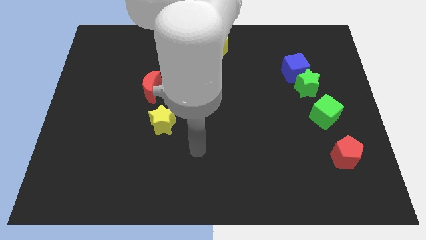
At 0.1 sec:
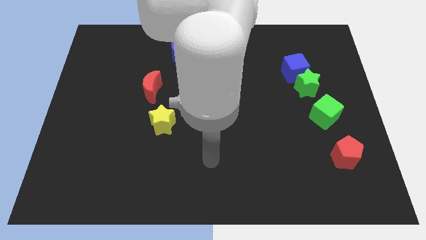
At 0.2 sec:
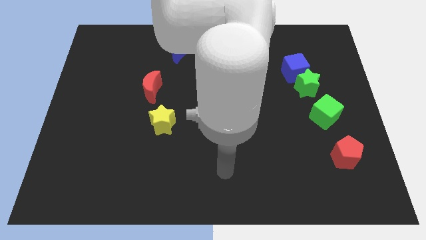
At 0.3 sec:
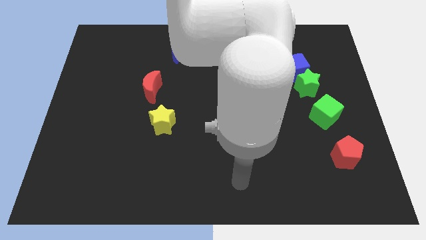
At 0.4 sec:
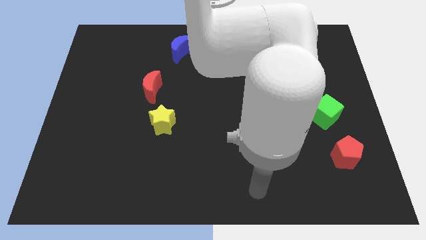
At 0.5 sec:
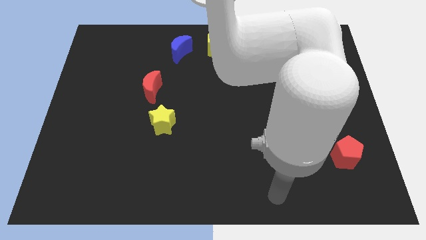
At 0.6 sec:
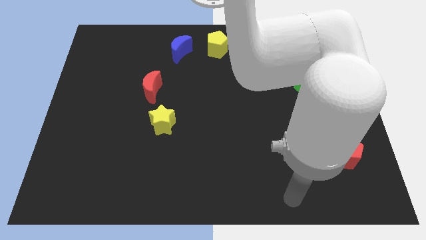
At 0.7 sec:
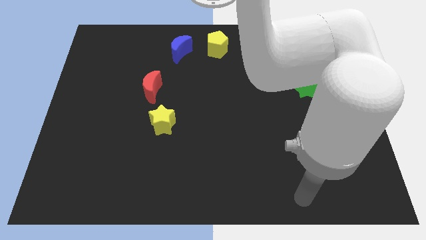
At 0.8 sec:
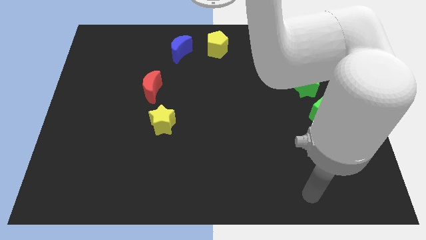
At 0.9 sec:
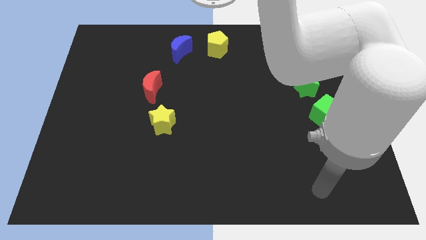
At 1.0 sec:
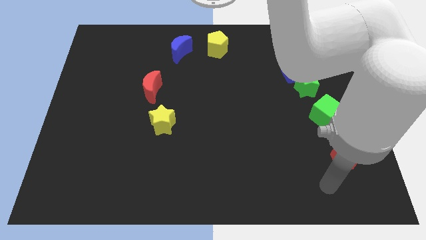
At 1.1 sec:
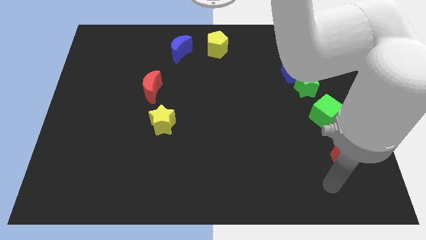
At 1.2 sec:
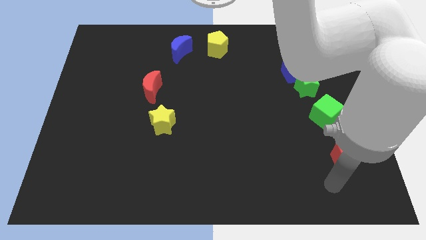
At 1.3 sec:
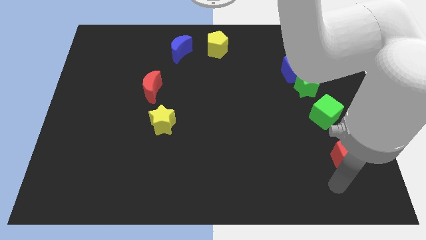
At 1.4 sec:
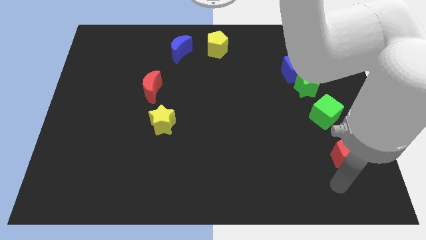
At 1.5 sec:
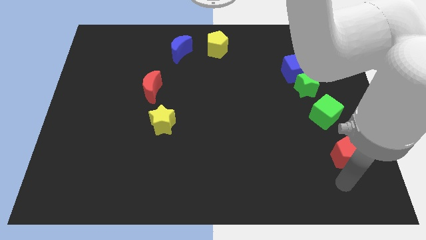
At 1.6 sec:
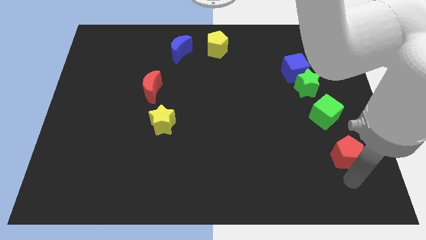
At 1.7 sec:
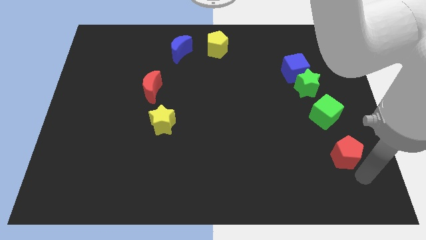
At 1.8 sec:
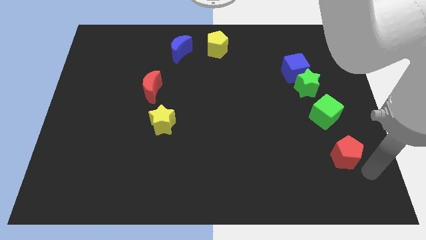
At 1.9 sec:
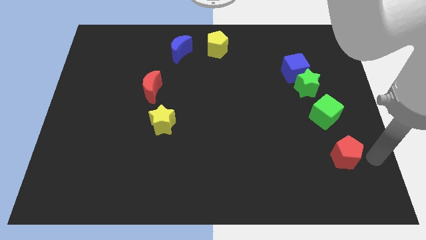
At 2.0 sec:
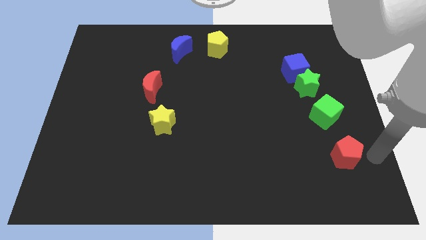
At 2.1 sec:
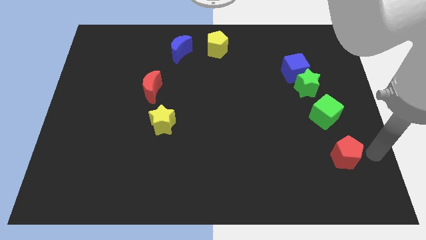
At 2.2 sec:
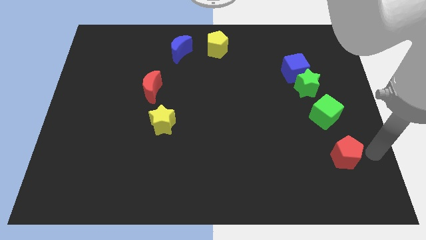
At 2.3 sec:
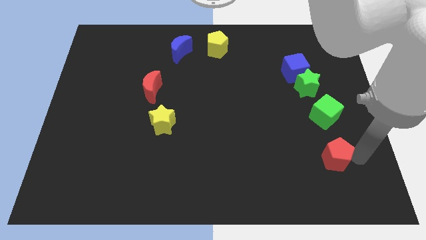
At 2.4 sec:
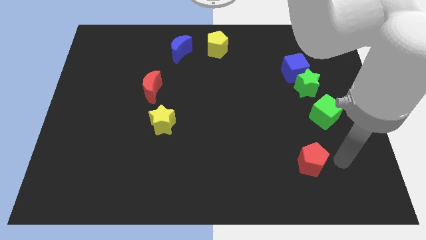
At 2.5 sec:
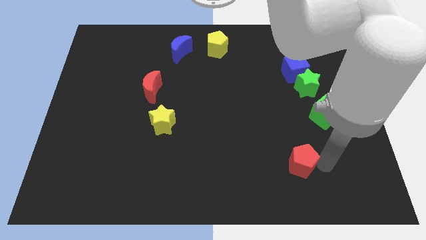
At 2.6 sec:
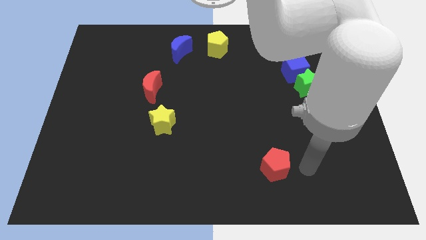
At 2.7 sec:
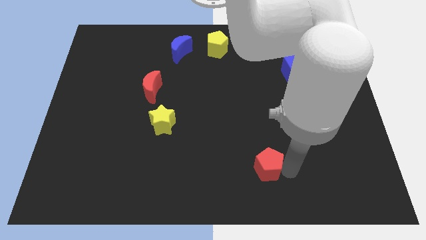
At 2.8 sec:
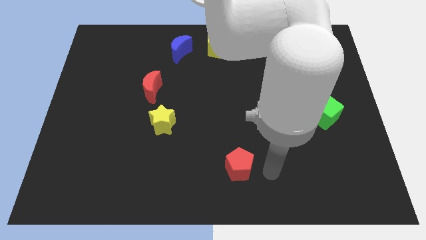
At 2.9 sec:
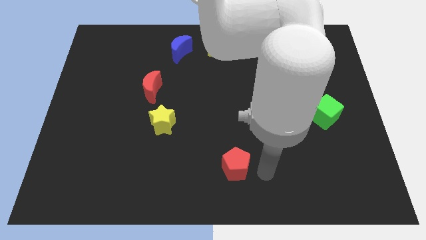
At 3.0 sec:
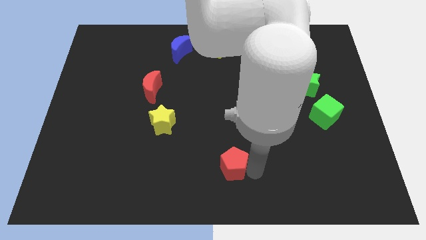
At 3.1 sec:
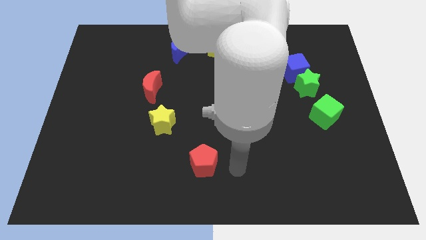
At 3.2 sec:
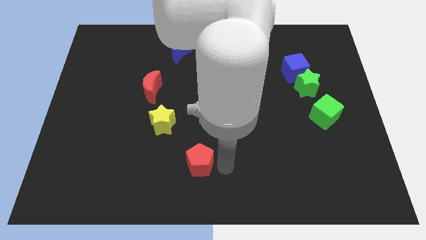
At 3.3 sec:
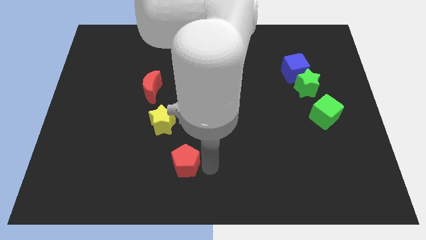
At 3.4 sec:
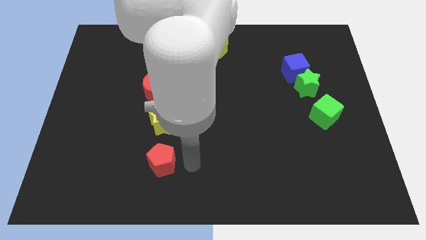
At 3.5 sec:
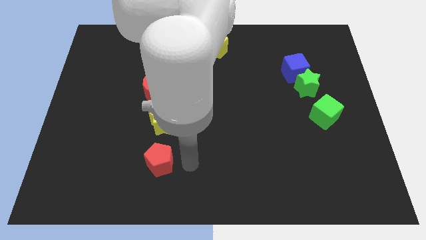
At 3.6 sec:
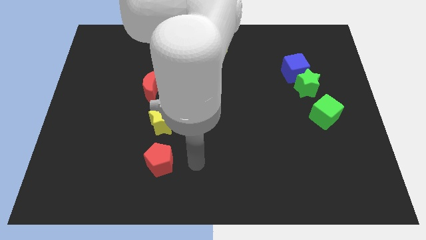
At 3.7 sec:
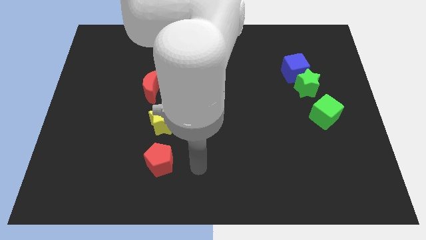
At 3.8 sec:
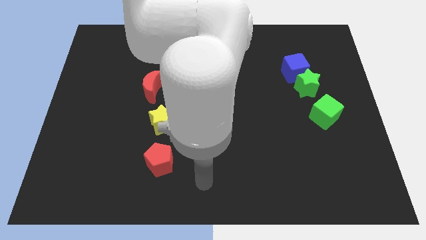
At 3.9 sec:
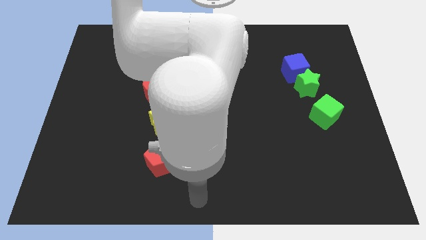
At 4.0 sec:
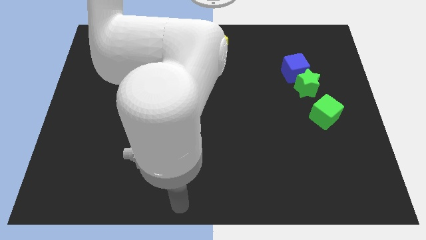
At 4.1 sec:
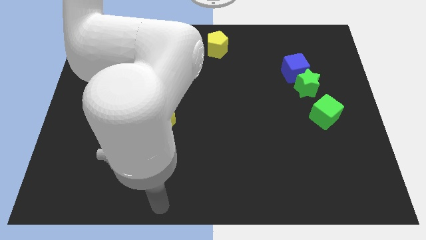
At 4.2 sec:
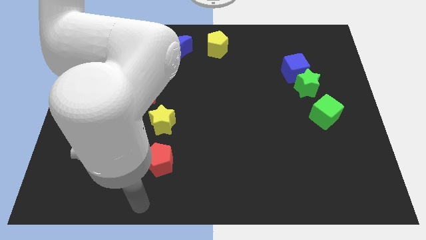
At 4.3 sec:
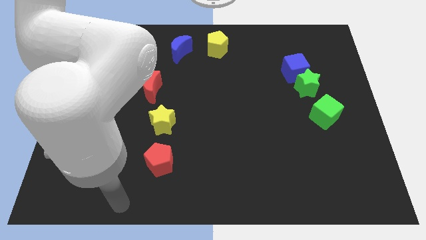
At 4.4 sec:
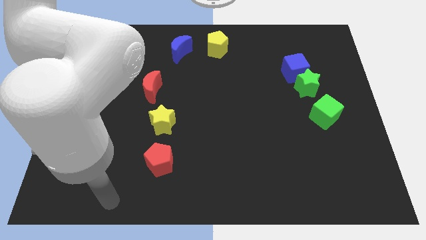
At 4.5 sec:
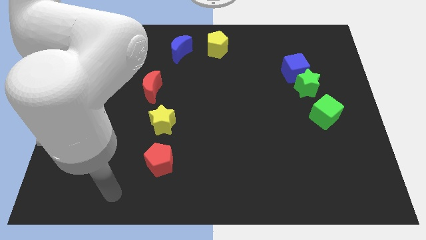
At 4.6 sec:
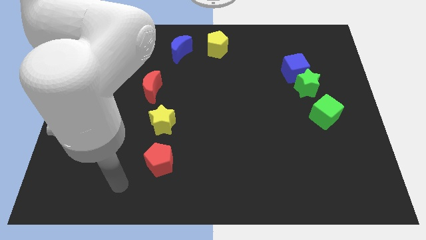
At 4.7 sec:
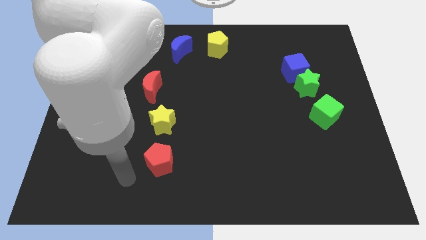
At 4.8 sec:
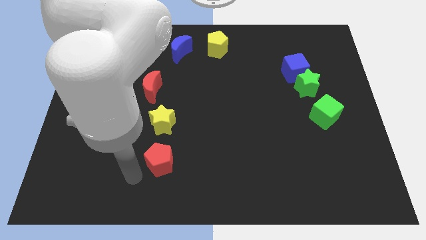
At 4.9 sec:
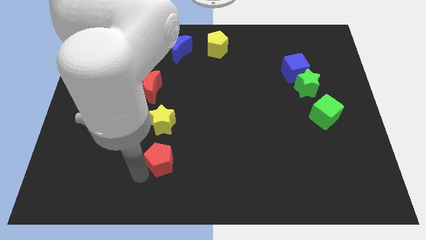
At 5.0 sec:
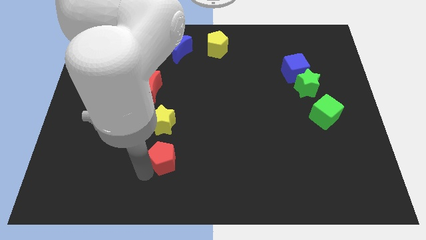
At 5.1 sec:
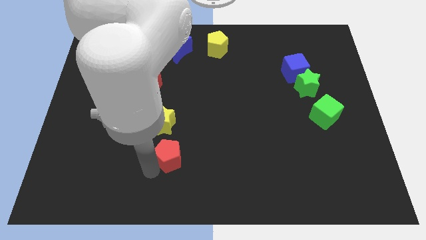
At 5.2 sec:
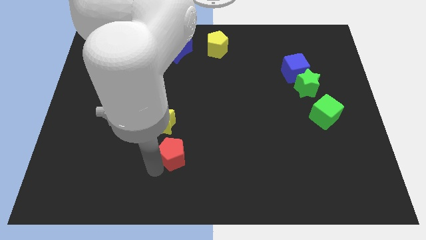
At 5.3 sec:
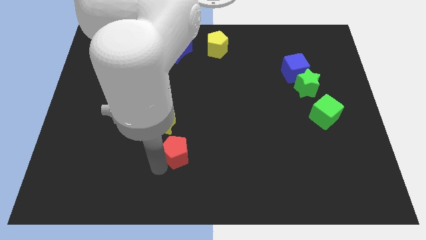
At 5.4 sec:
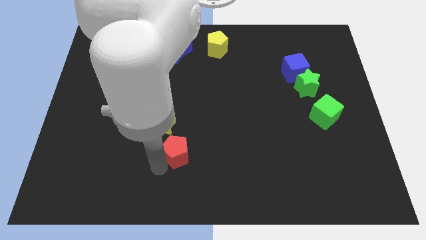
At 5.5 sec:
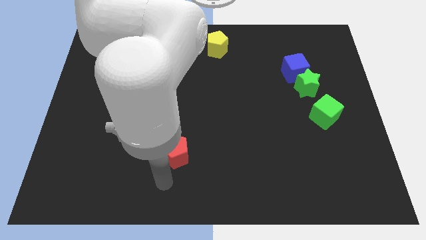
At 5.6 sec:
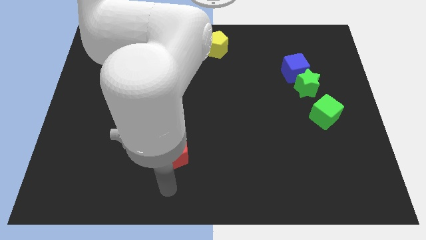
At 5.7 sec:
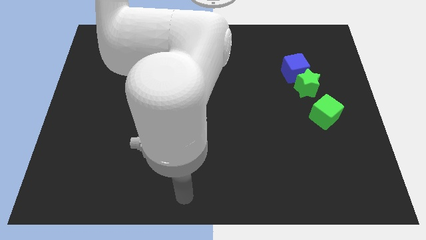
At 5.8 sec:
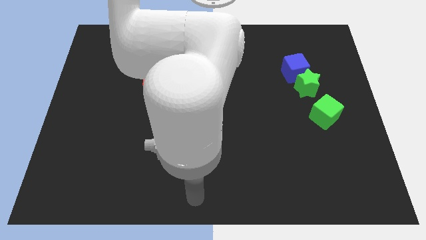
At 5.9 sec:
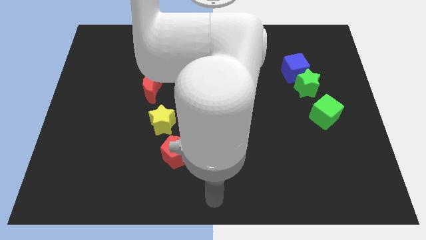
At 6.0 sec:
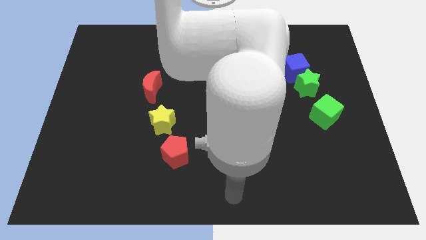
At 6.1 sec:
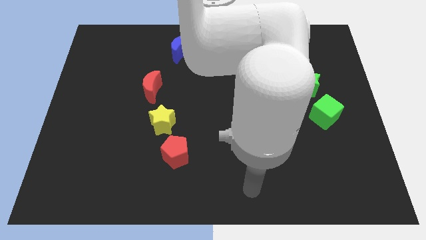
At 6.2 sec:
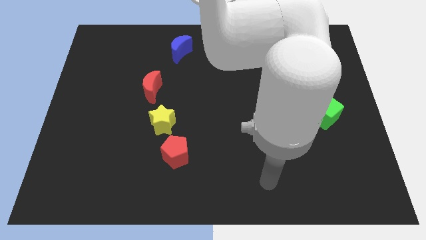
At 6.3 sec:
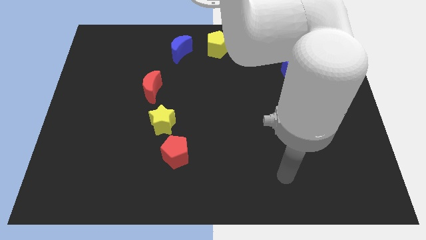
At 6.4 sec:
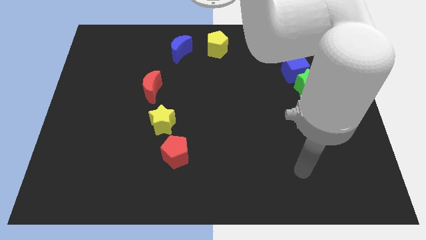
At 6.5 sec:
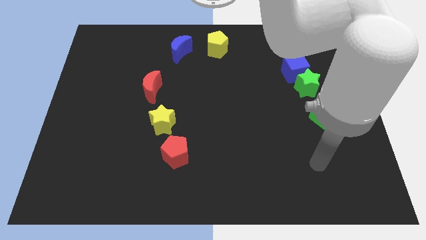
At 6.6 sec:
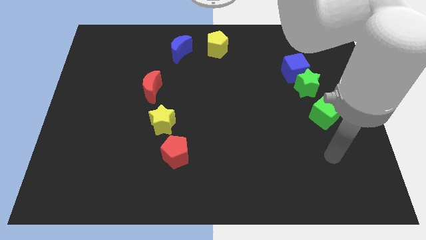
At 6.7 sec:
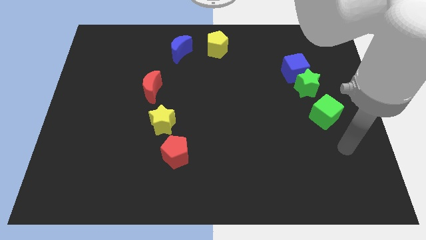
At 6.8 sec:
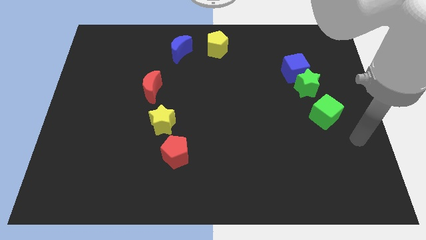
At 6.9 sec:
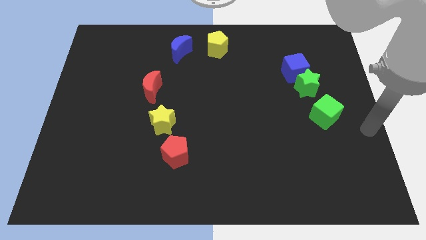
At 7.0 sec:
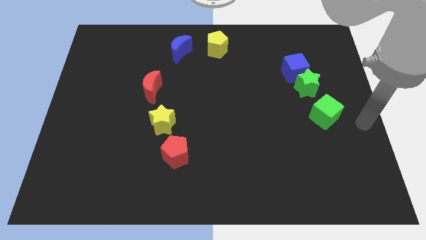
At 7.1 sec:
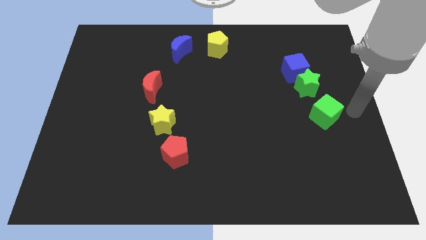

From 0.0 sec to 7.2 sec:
place the red pentagon below the yellow star to form a vertical line

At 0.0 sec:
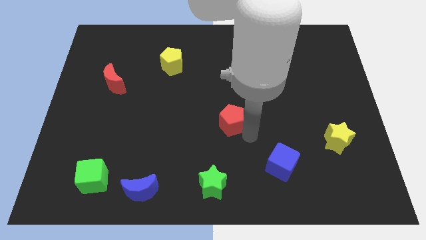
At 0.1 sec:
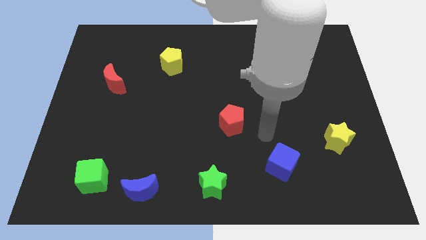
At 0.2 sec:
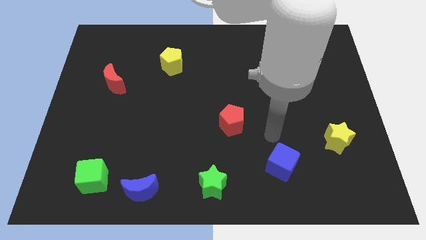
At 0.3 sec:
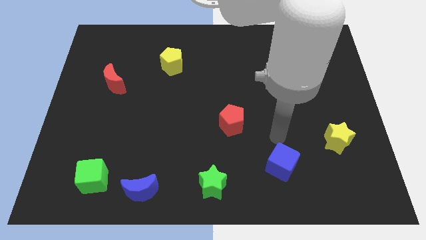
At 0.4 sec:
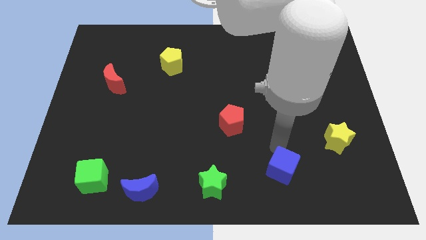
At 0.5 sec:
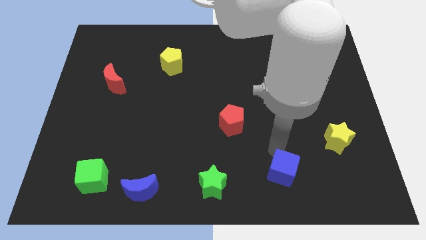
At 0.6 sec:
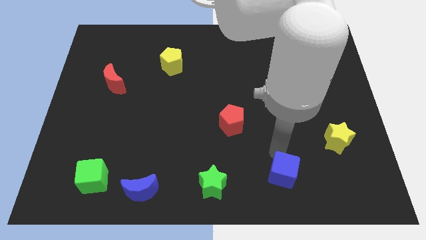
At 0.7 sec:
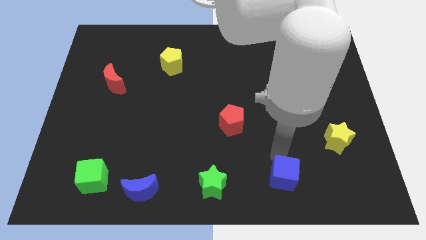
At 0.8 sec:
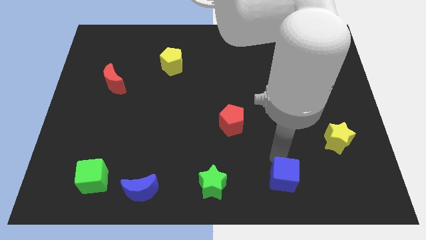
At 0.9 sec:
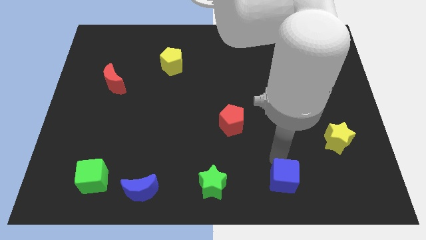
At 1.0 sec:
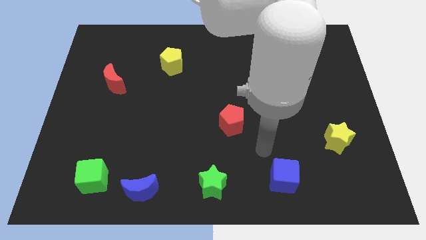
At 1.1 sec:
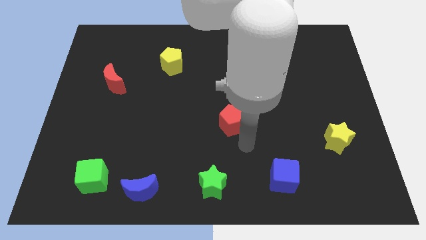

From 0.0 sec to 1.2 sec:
push the blue cube to the bottom of the board

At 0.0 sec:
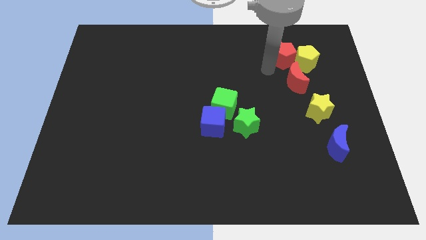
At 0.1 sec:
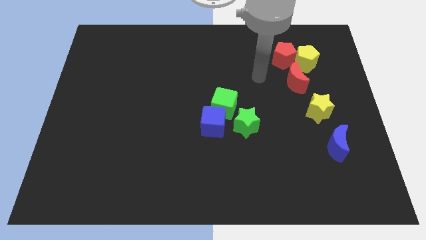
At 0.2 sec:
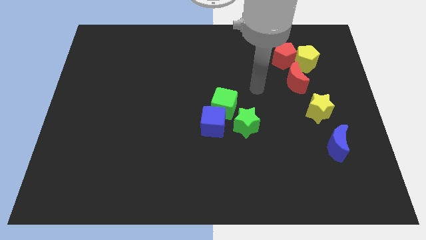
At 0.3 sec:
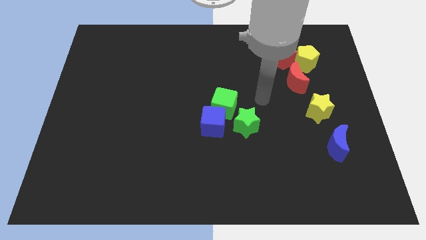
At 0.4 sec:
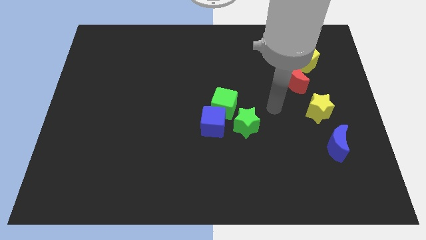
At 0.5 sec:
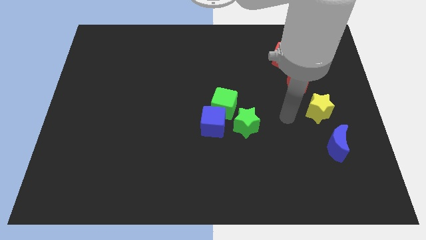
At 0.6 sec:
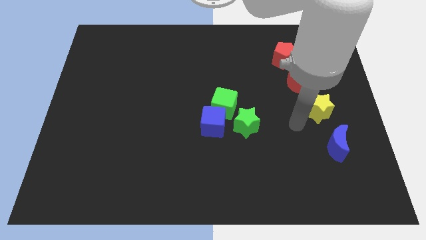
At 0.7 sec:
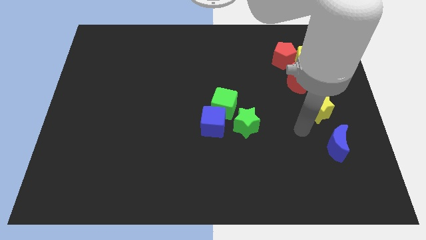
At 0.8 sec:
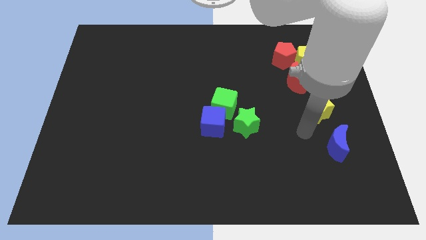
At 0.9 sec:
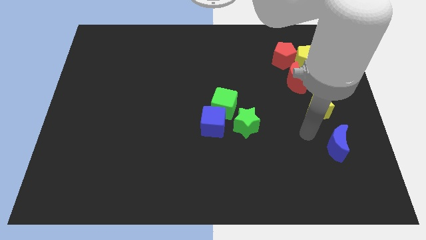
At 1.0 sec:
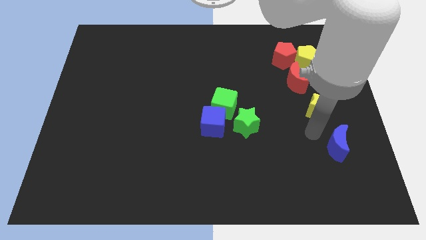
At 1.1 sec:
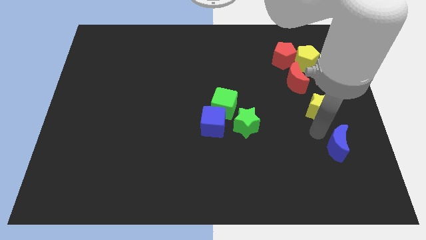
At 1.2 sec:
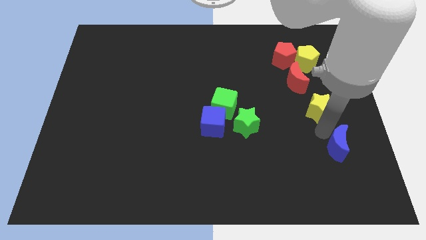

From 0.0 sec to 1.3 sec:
move your arm away red pentagon
